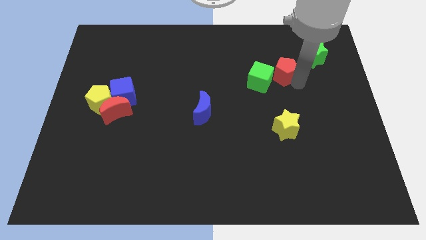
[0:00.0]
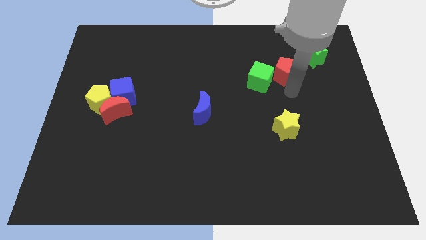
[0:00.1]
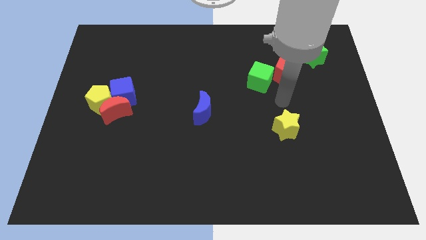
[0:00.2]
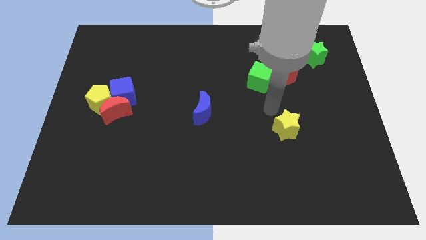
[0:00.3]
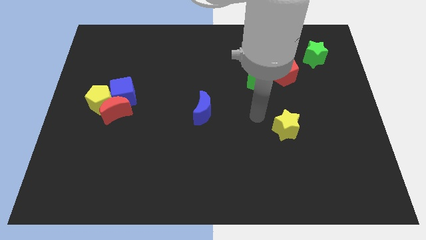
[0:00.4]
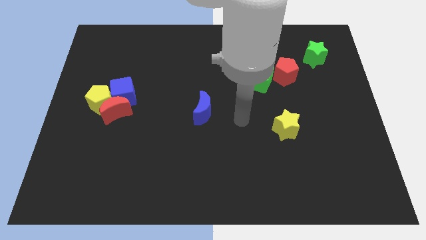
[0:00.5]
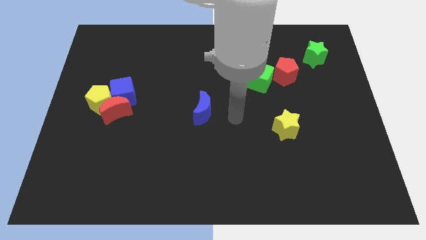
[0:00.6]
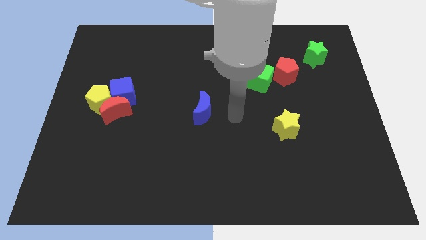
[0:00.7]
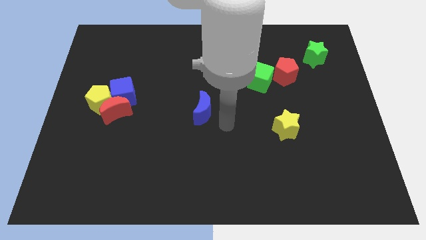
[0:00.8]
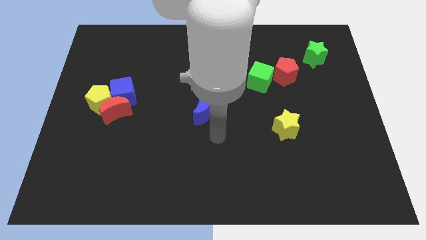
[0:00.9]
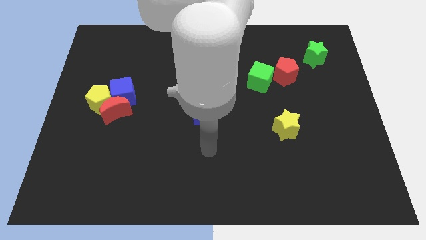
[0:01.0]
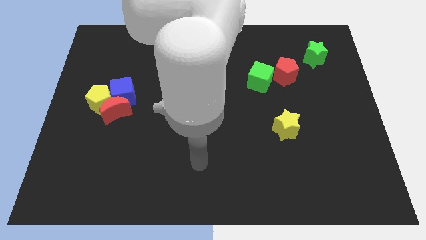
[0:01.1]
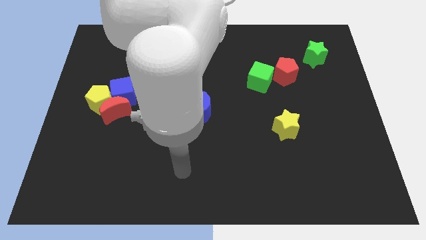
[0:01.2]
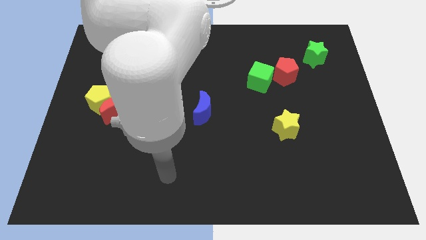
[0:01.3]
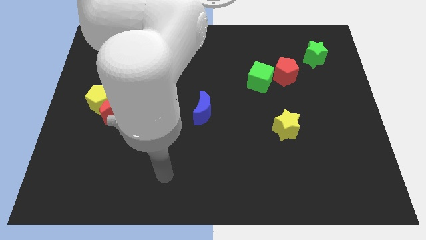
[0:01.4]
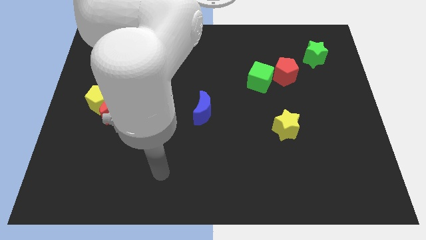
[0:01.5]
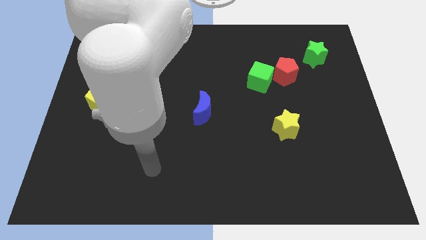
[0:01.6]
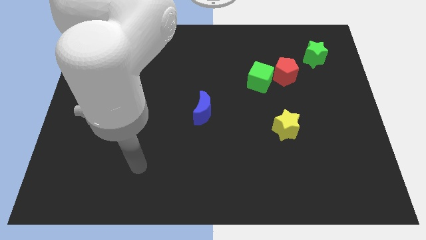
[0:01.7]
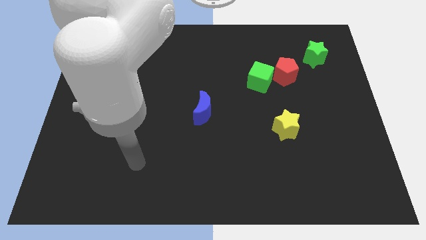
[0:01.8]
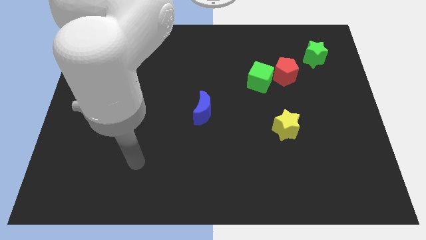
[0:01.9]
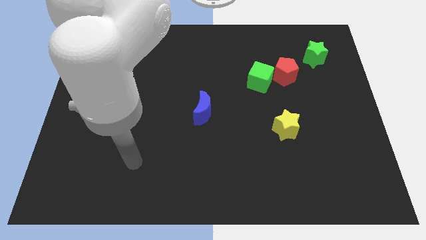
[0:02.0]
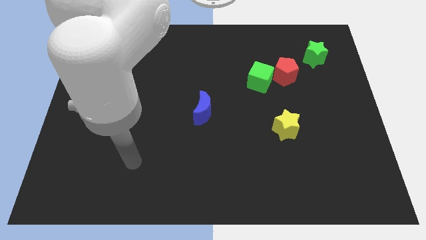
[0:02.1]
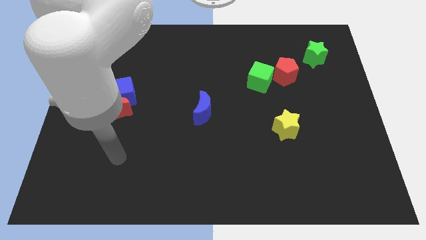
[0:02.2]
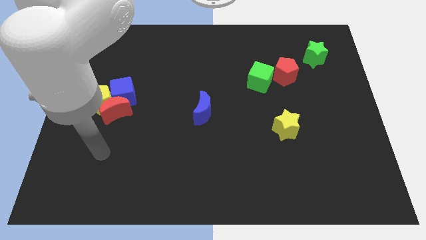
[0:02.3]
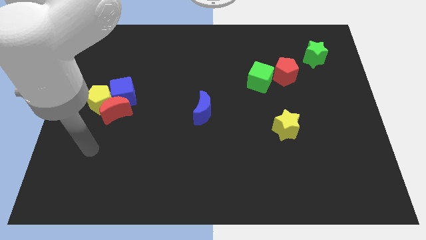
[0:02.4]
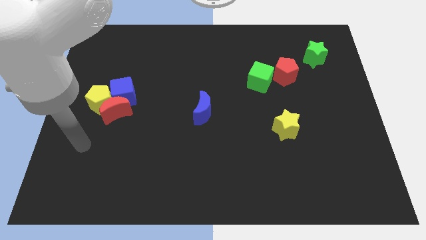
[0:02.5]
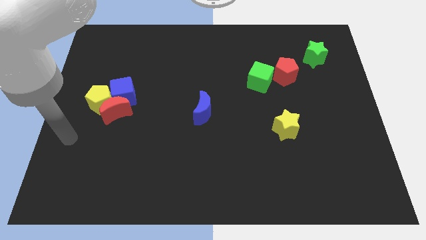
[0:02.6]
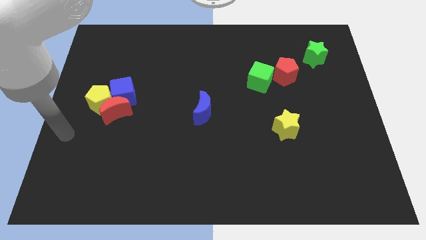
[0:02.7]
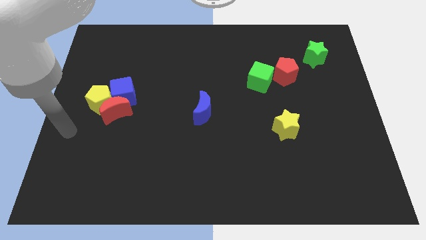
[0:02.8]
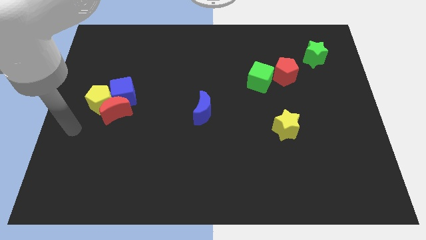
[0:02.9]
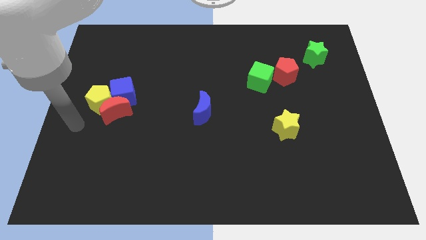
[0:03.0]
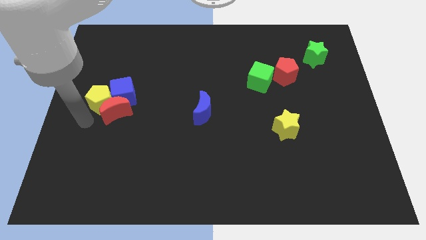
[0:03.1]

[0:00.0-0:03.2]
move your arm away from the red pentagon

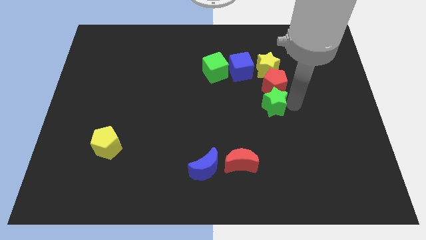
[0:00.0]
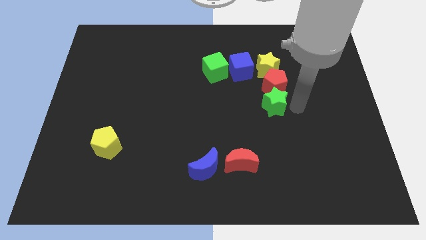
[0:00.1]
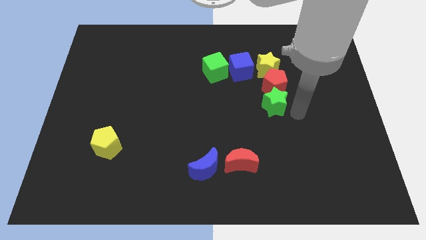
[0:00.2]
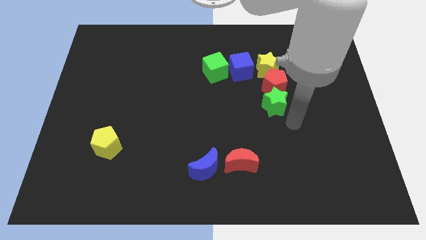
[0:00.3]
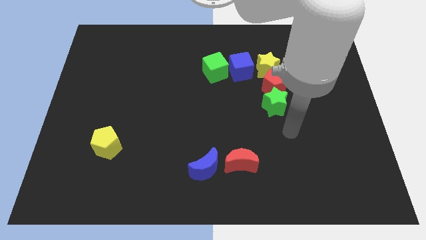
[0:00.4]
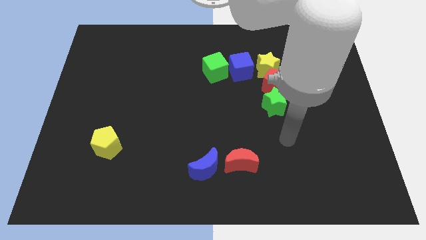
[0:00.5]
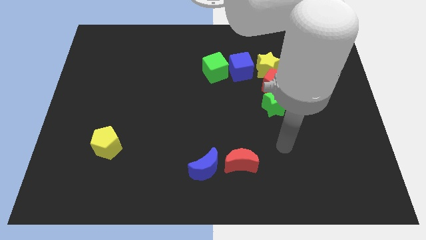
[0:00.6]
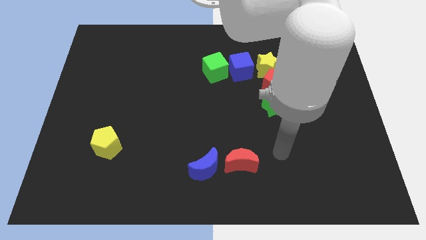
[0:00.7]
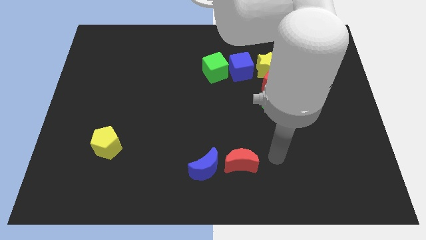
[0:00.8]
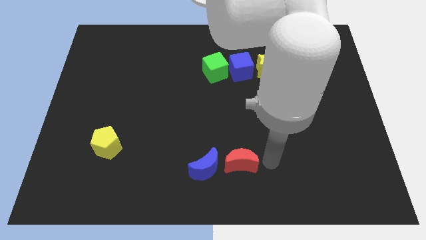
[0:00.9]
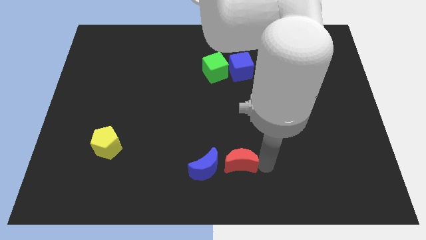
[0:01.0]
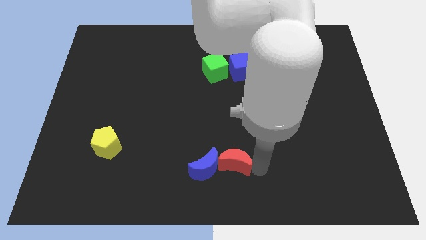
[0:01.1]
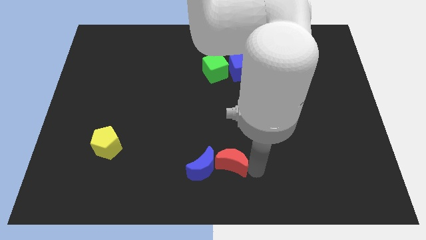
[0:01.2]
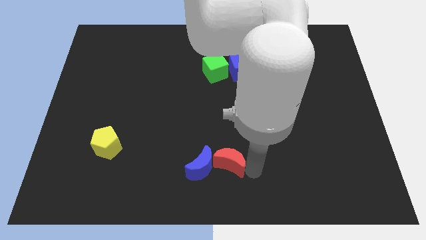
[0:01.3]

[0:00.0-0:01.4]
push the red crescent slightly into the right side of the blue moon

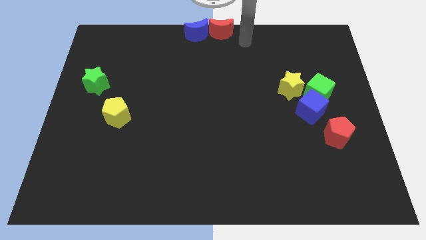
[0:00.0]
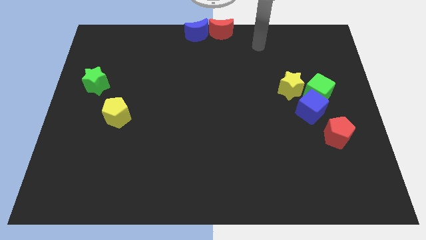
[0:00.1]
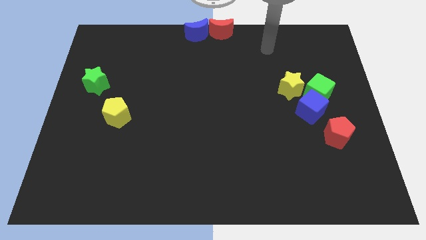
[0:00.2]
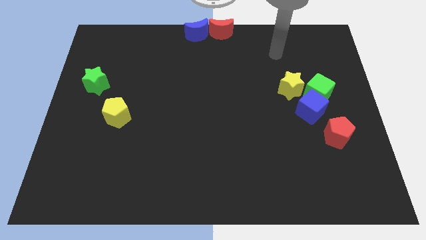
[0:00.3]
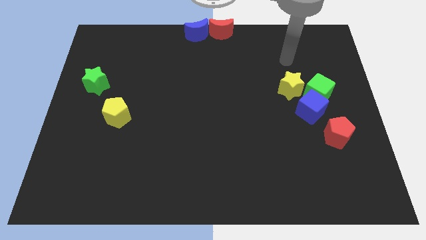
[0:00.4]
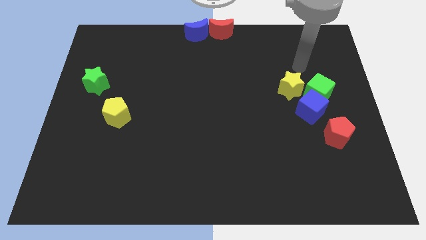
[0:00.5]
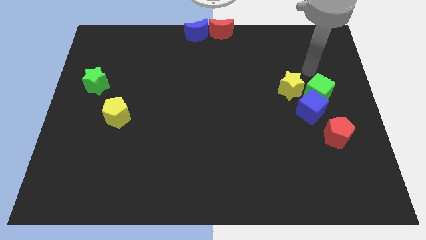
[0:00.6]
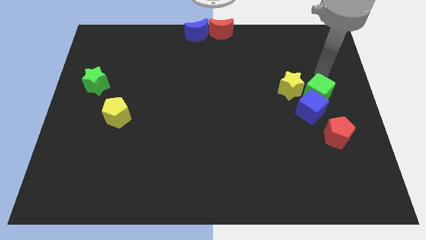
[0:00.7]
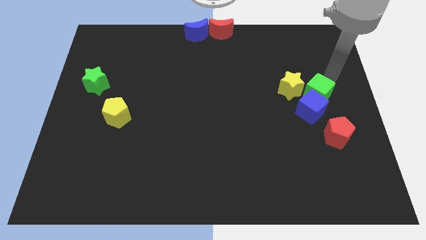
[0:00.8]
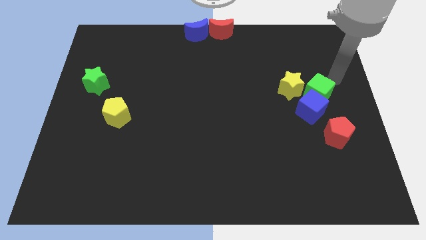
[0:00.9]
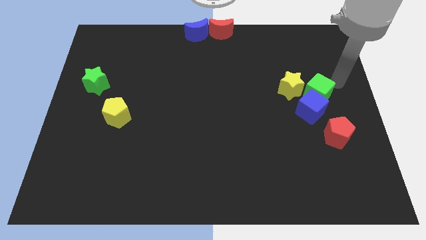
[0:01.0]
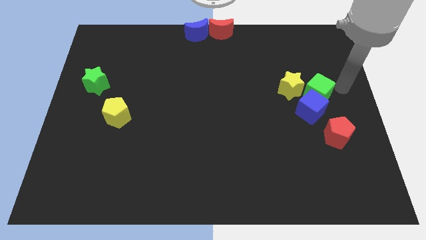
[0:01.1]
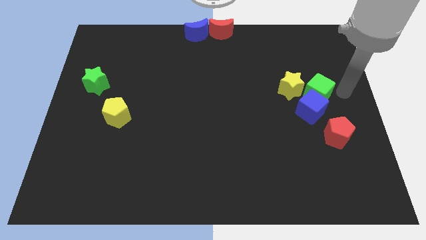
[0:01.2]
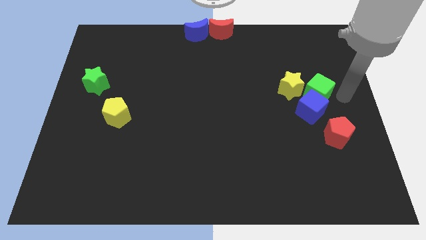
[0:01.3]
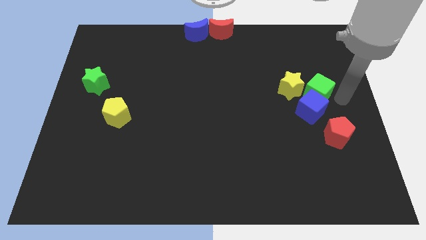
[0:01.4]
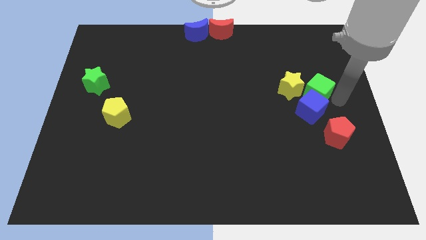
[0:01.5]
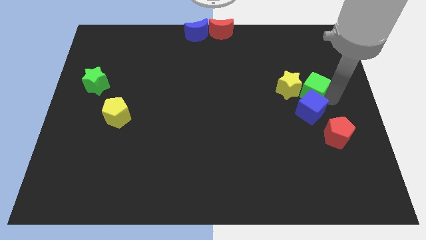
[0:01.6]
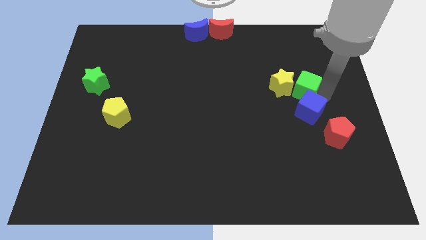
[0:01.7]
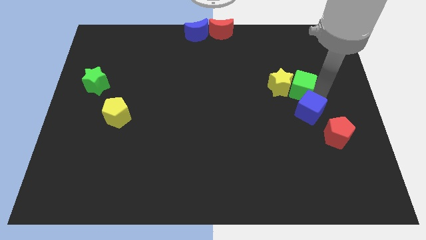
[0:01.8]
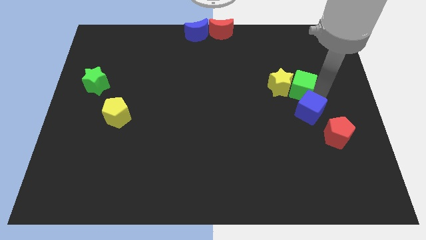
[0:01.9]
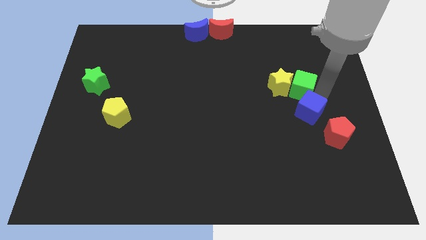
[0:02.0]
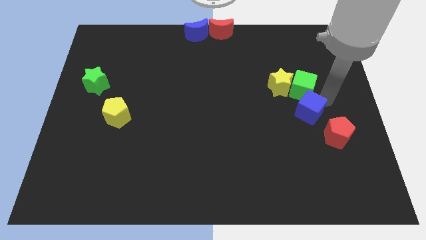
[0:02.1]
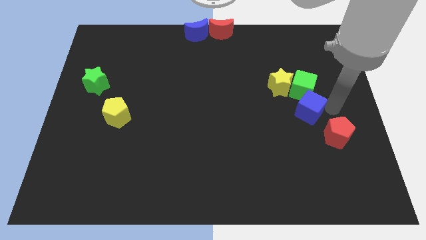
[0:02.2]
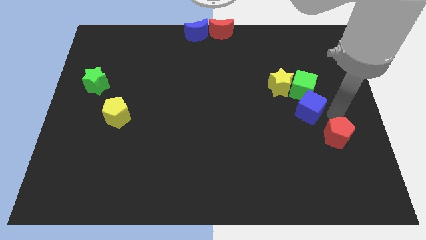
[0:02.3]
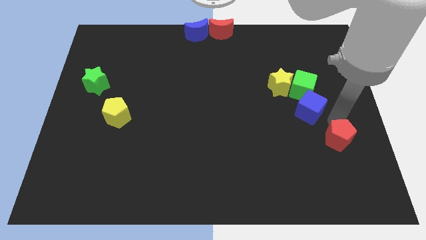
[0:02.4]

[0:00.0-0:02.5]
place your arm above red pentagon

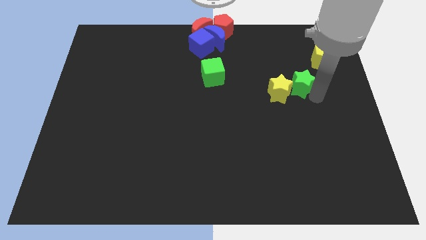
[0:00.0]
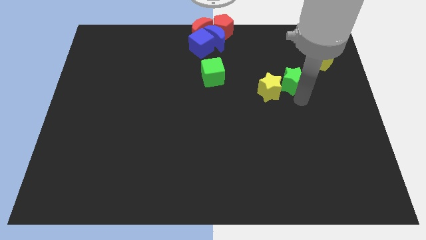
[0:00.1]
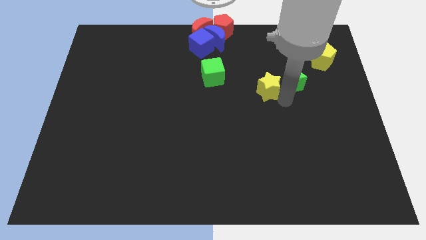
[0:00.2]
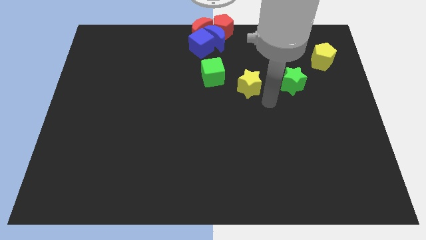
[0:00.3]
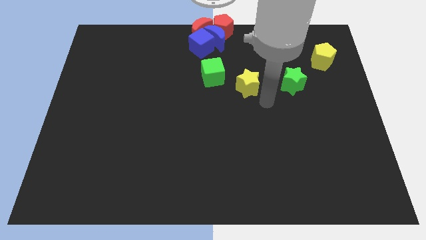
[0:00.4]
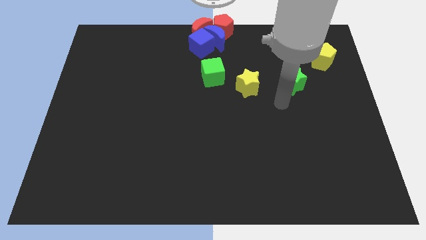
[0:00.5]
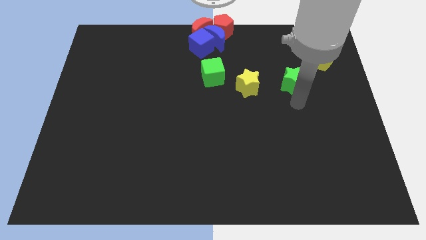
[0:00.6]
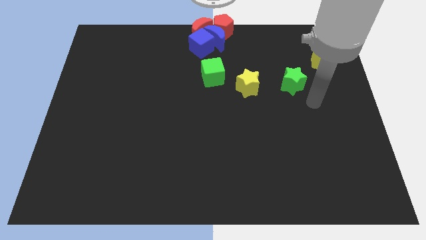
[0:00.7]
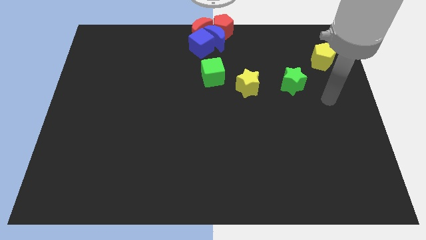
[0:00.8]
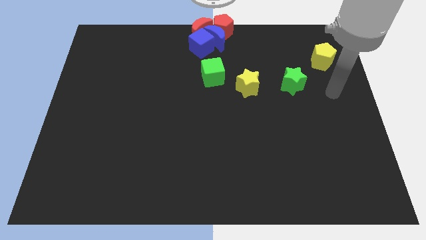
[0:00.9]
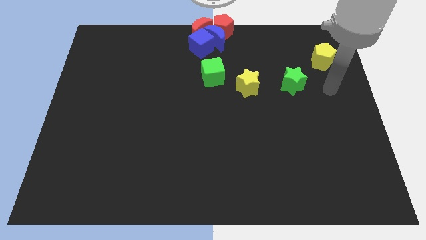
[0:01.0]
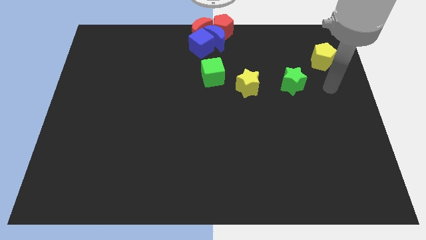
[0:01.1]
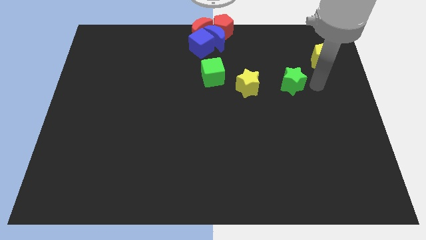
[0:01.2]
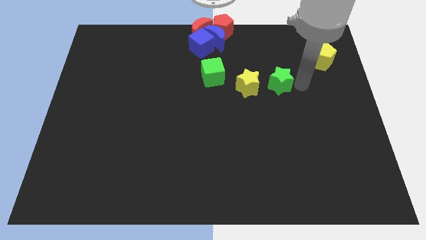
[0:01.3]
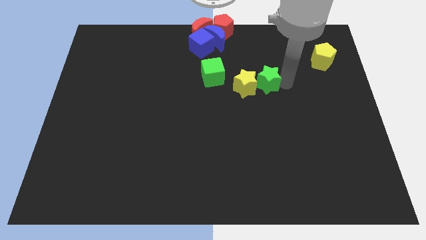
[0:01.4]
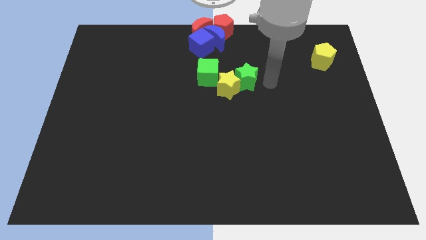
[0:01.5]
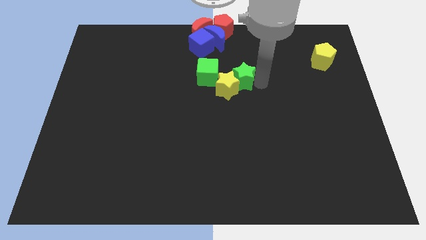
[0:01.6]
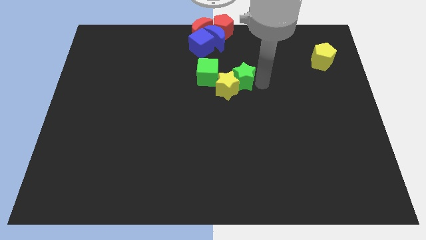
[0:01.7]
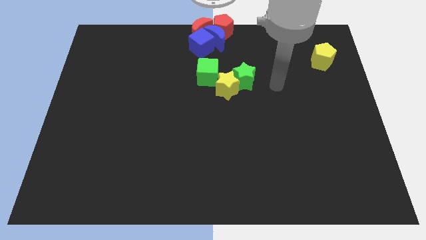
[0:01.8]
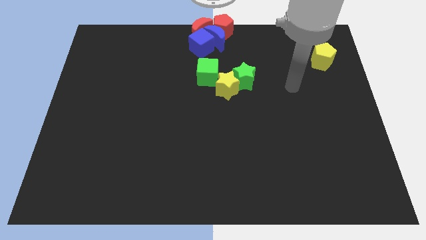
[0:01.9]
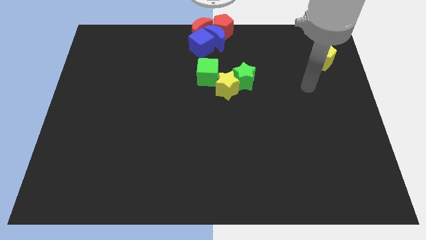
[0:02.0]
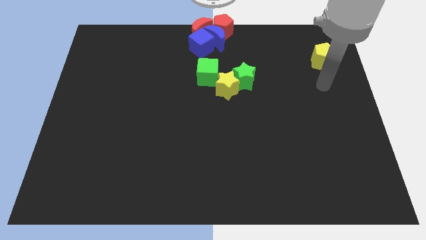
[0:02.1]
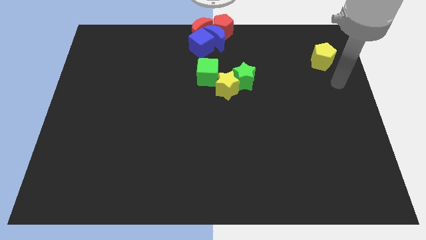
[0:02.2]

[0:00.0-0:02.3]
move the green star yellow star to the top center
